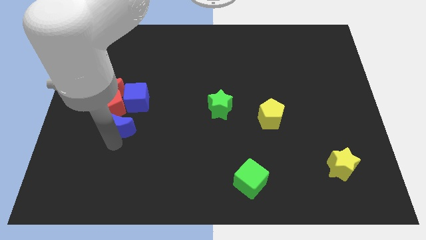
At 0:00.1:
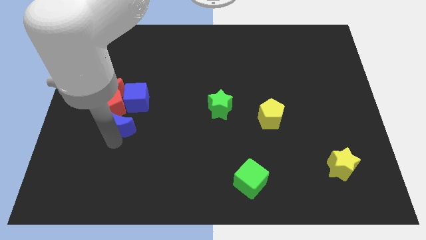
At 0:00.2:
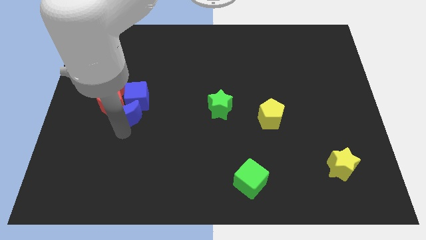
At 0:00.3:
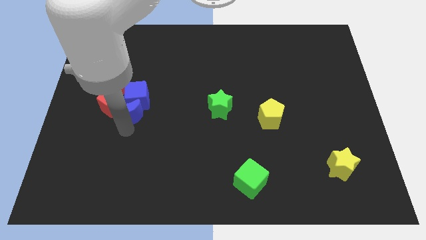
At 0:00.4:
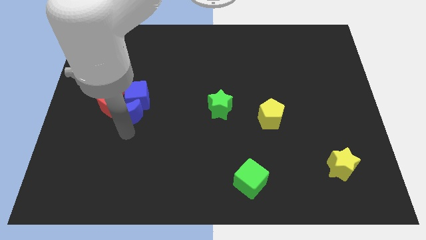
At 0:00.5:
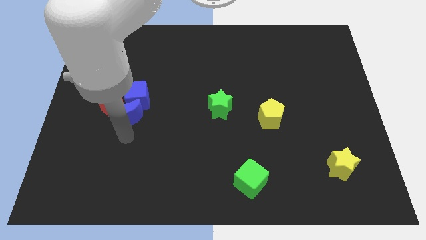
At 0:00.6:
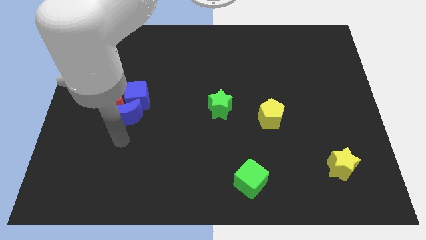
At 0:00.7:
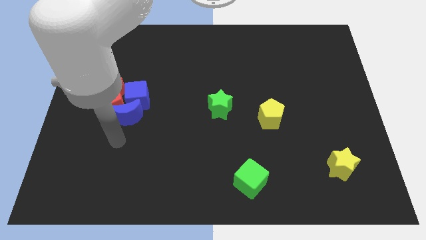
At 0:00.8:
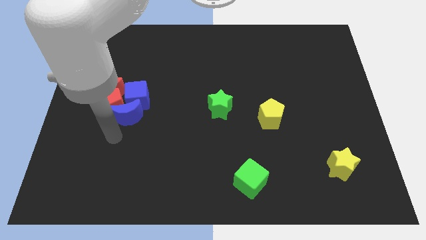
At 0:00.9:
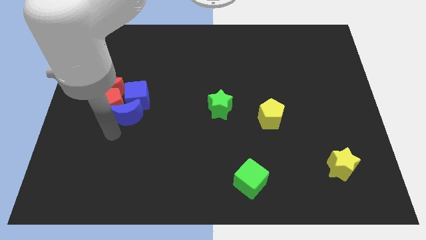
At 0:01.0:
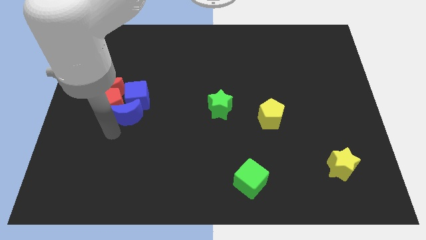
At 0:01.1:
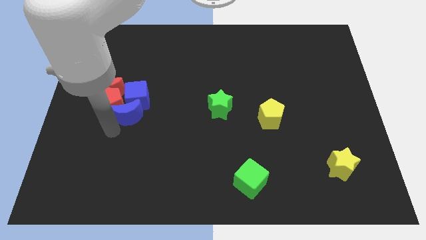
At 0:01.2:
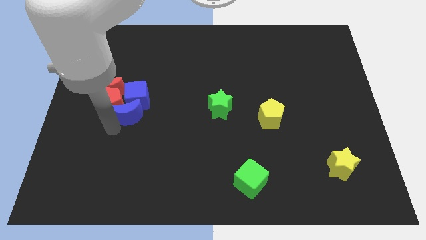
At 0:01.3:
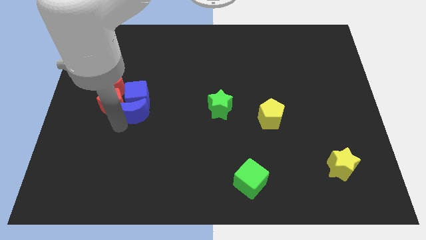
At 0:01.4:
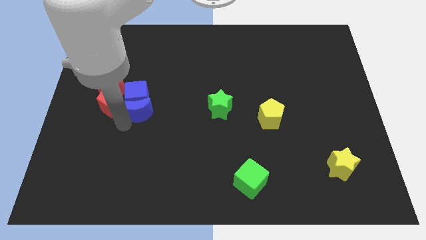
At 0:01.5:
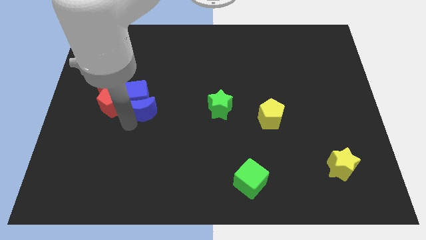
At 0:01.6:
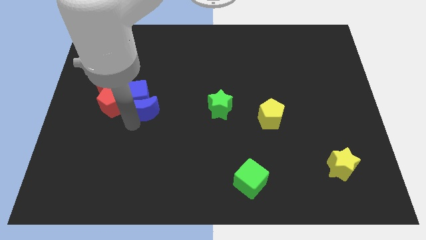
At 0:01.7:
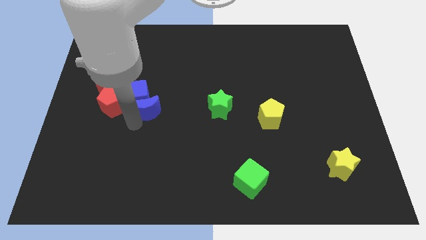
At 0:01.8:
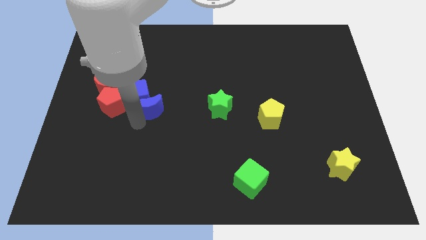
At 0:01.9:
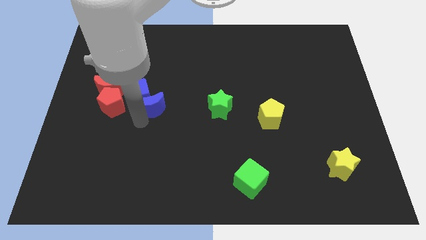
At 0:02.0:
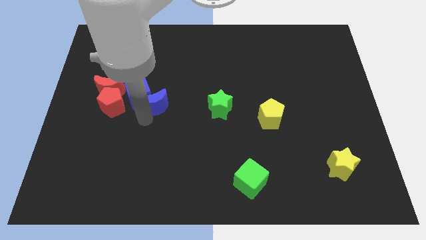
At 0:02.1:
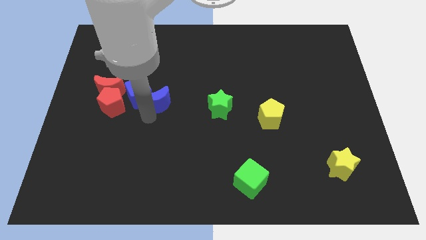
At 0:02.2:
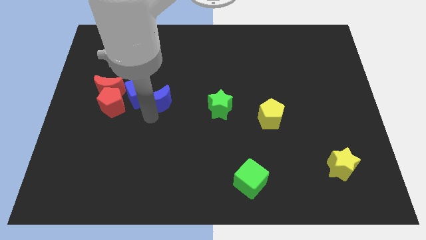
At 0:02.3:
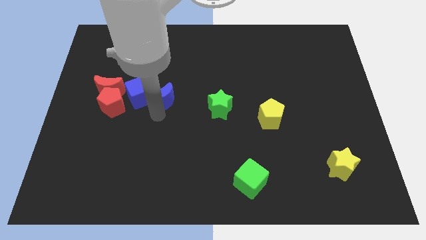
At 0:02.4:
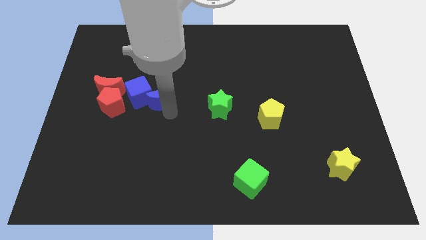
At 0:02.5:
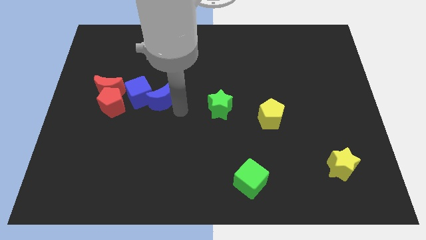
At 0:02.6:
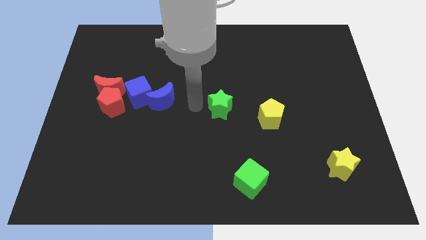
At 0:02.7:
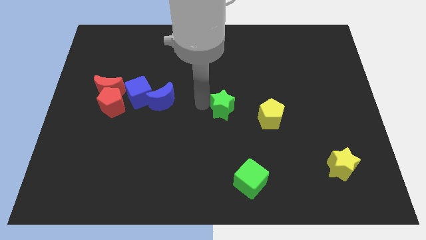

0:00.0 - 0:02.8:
place the blue moon to the right of the blue cube

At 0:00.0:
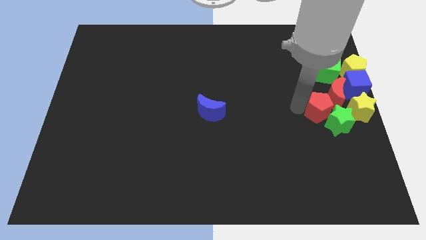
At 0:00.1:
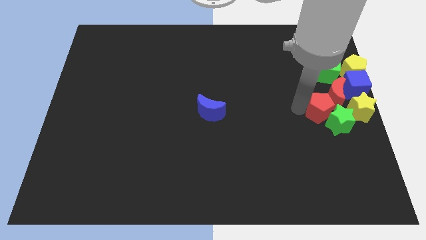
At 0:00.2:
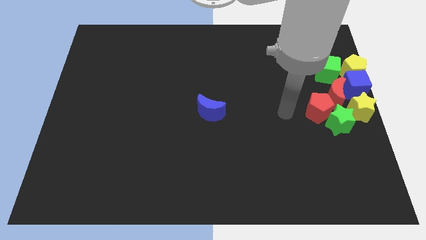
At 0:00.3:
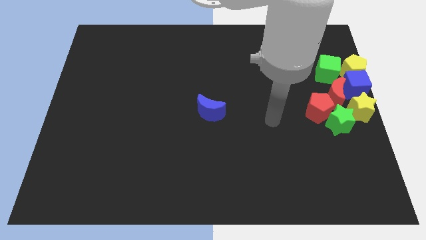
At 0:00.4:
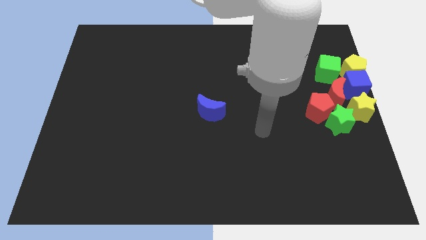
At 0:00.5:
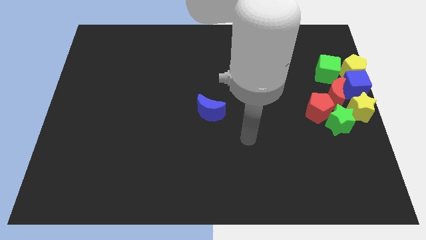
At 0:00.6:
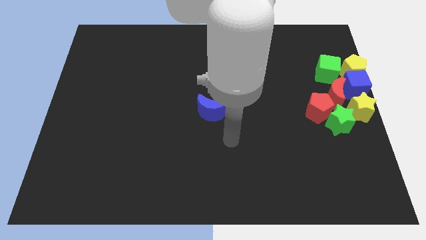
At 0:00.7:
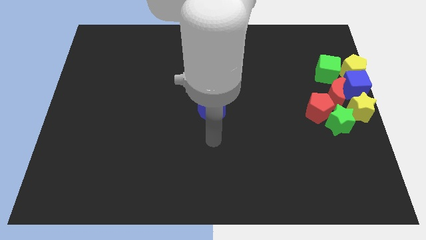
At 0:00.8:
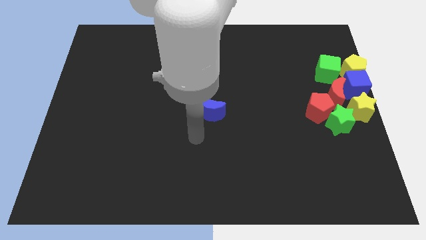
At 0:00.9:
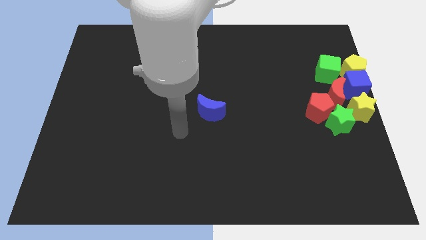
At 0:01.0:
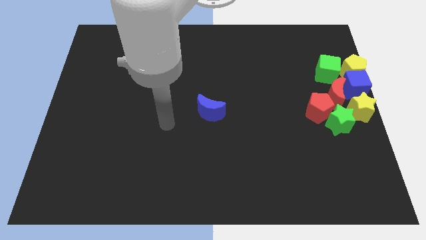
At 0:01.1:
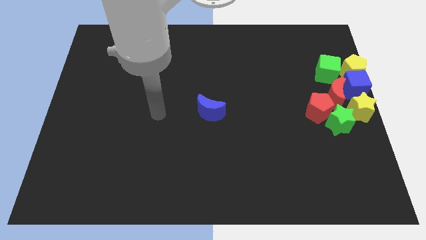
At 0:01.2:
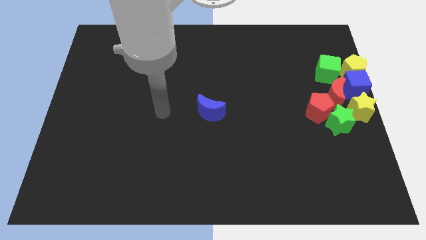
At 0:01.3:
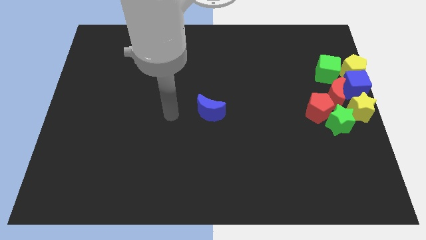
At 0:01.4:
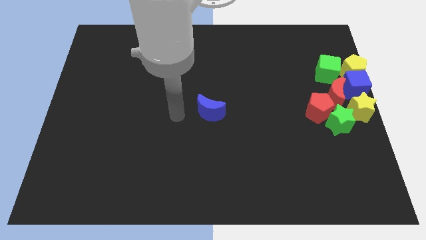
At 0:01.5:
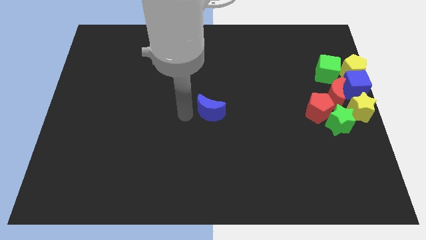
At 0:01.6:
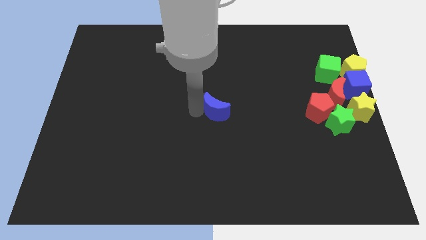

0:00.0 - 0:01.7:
move your arm towards the blue crescent

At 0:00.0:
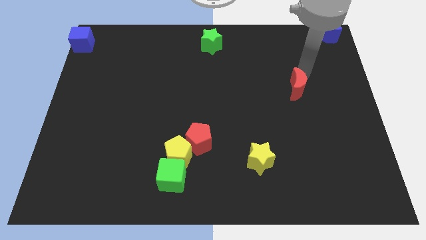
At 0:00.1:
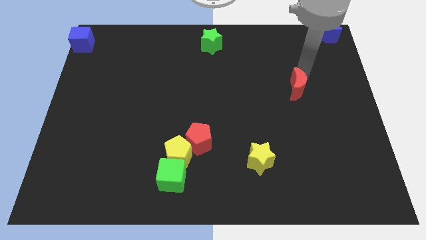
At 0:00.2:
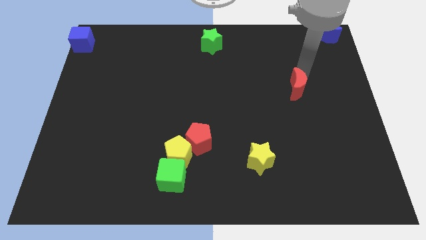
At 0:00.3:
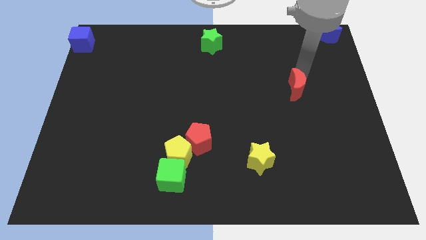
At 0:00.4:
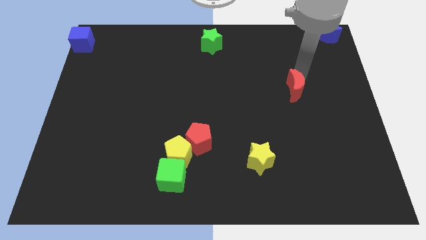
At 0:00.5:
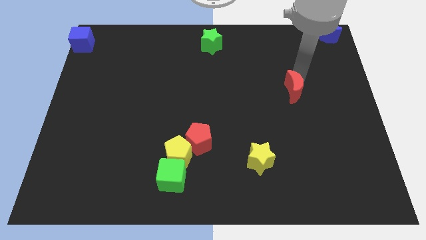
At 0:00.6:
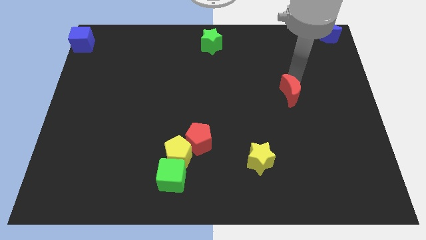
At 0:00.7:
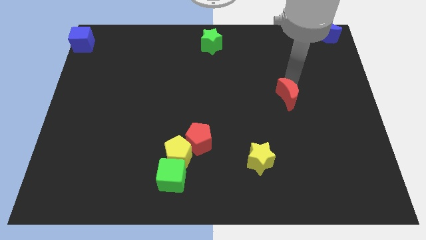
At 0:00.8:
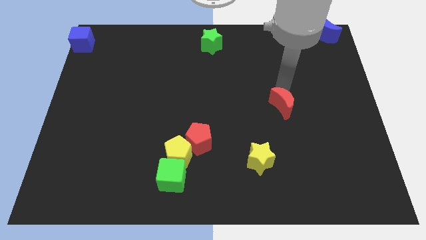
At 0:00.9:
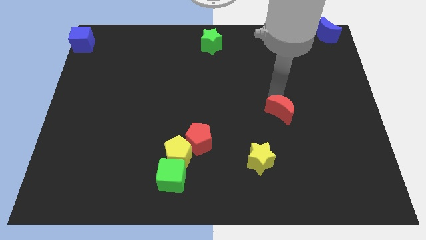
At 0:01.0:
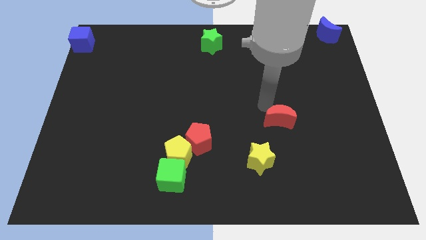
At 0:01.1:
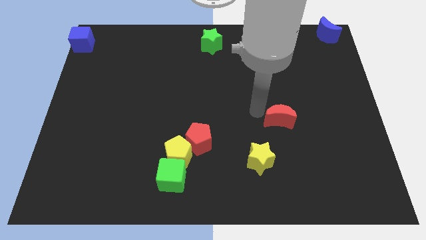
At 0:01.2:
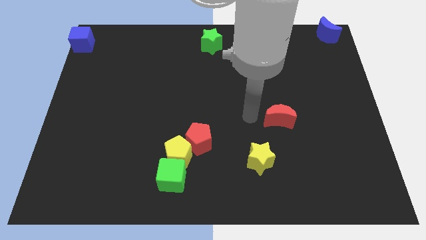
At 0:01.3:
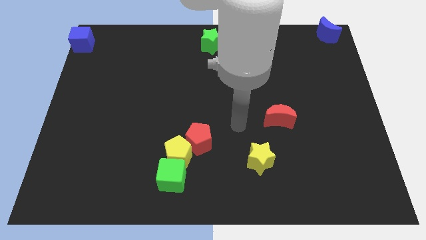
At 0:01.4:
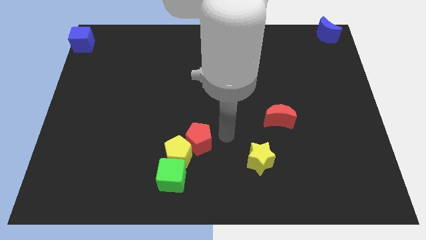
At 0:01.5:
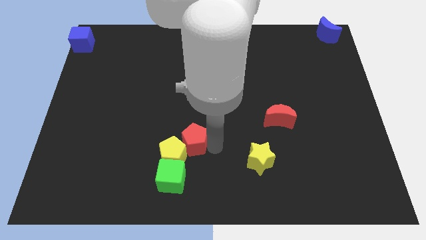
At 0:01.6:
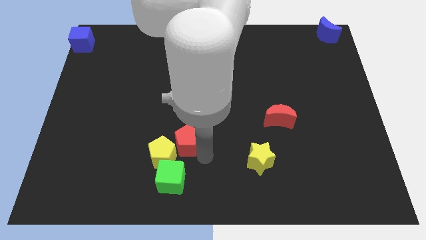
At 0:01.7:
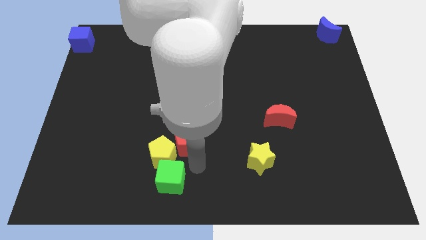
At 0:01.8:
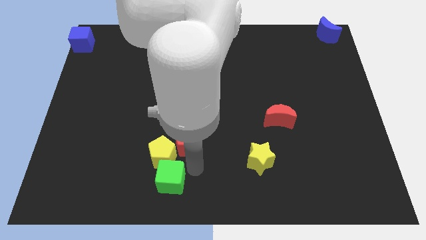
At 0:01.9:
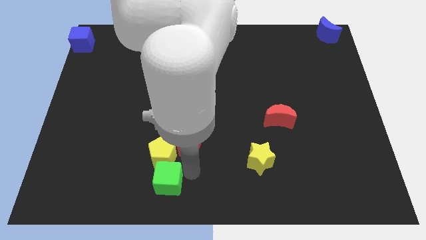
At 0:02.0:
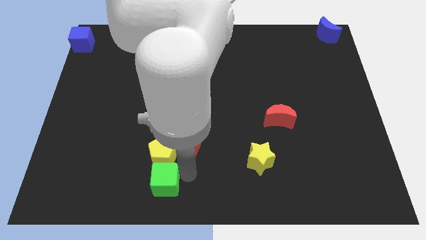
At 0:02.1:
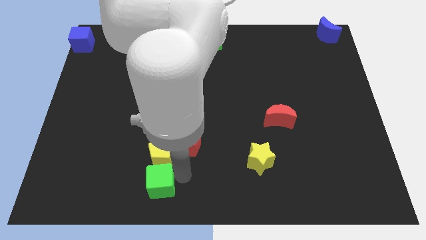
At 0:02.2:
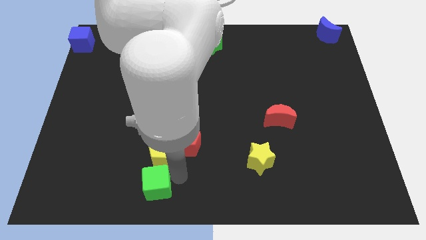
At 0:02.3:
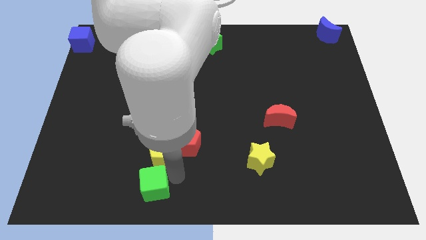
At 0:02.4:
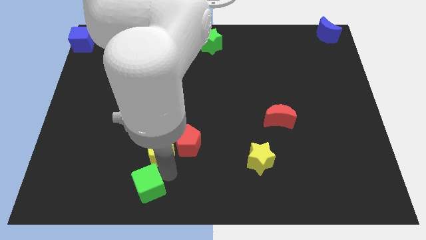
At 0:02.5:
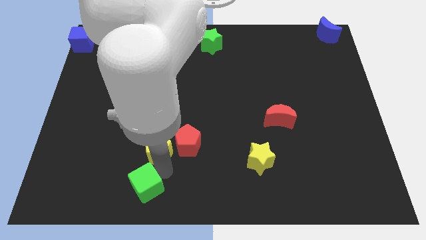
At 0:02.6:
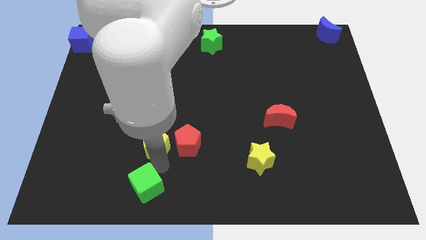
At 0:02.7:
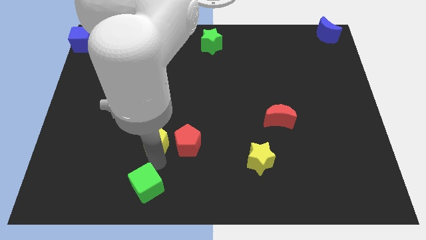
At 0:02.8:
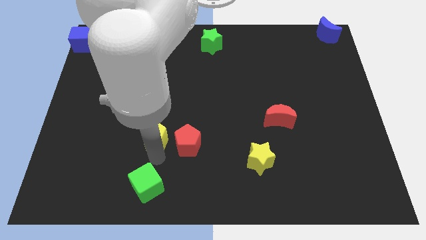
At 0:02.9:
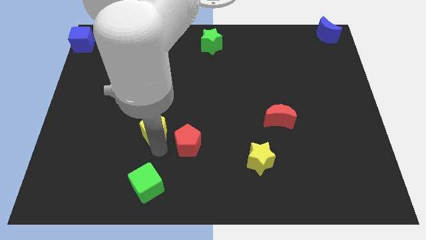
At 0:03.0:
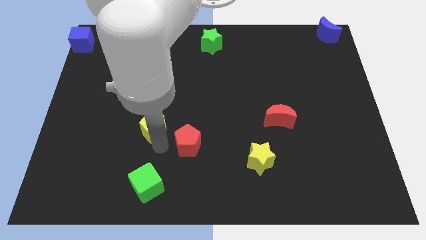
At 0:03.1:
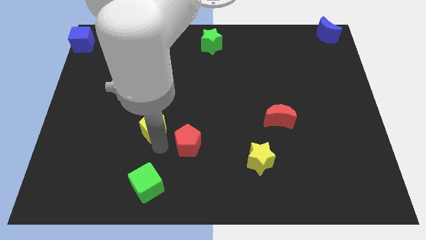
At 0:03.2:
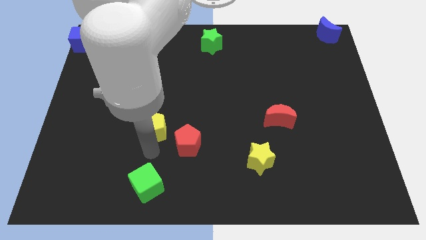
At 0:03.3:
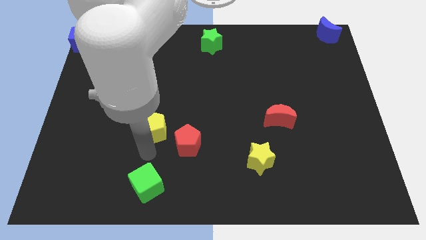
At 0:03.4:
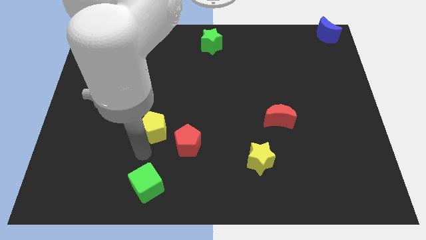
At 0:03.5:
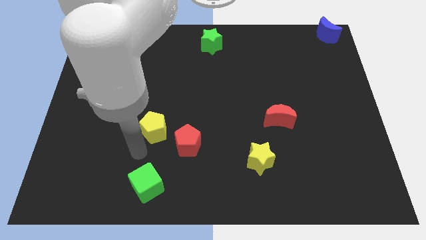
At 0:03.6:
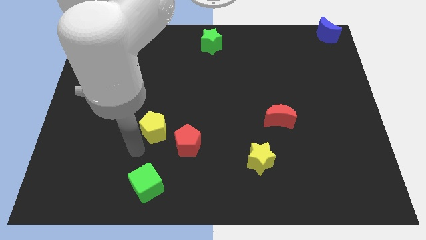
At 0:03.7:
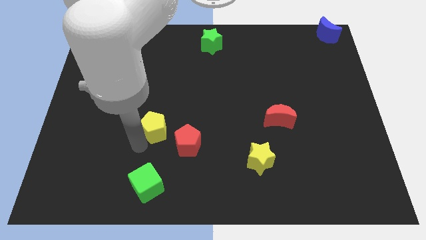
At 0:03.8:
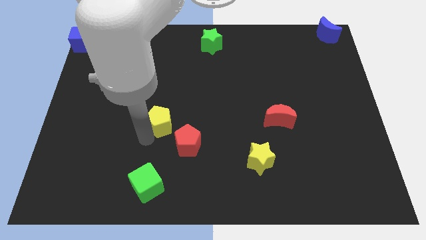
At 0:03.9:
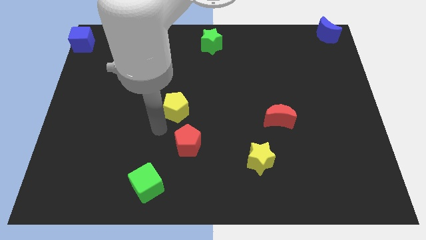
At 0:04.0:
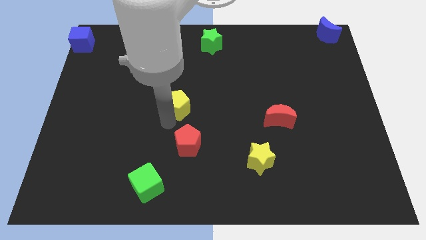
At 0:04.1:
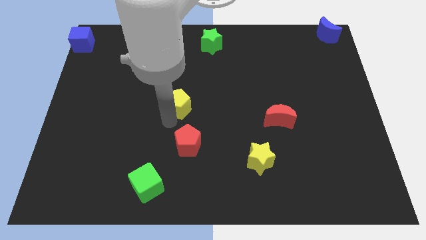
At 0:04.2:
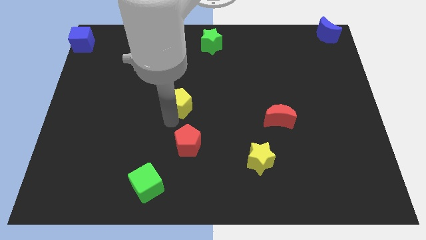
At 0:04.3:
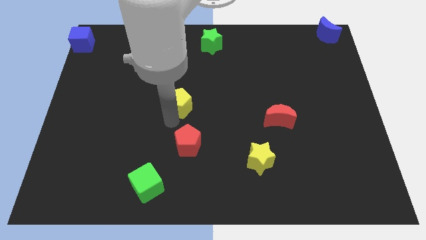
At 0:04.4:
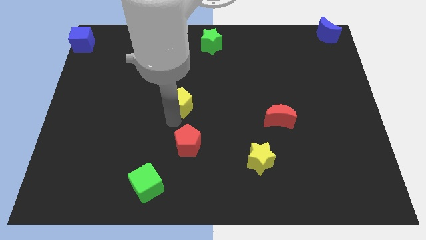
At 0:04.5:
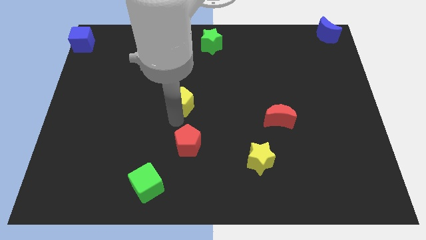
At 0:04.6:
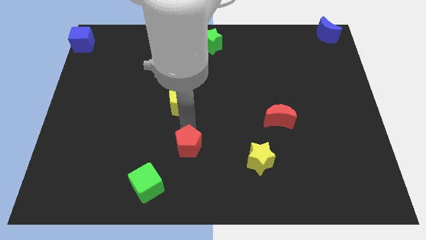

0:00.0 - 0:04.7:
separate the yellow pentagon from green cube and red pentagon
